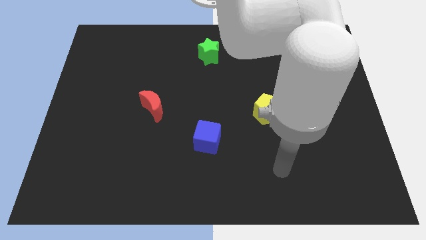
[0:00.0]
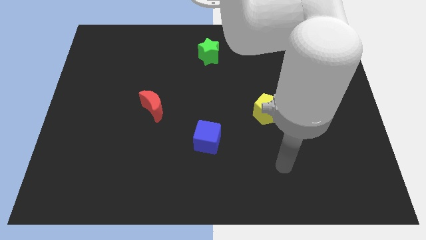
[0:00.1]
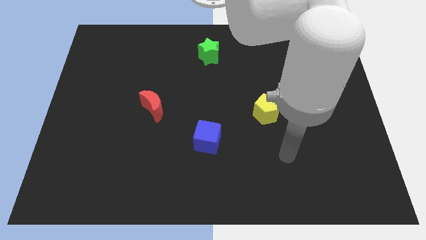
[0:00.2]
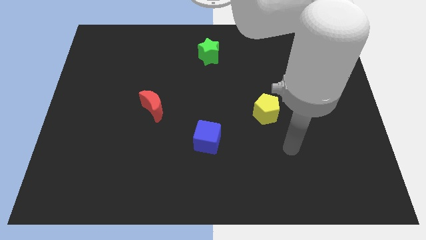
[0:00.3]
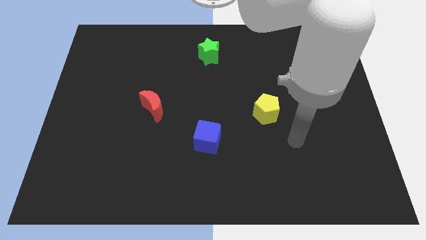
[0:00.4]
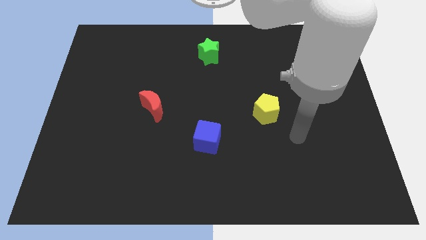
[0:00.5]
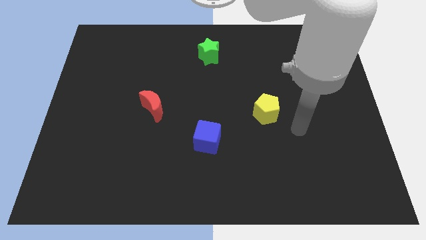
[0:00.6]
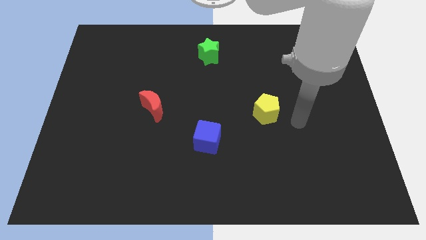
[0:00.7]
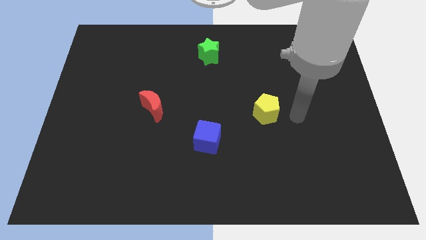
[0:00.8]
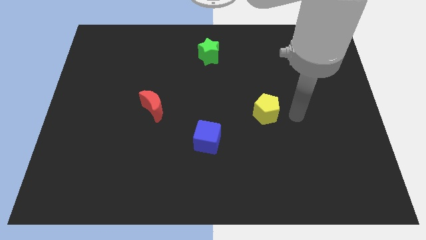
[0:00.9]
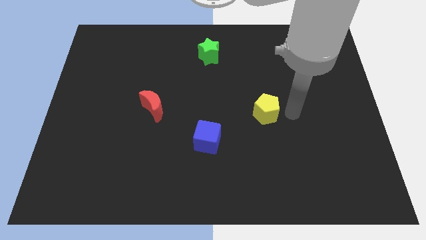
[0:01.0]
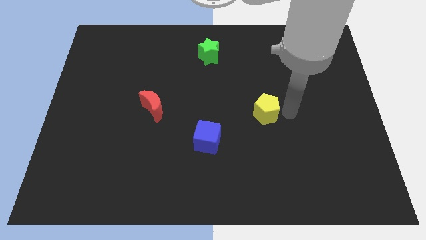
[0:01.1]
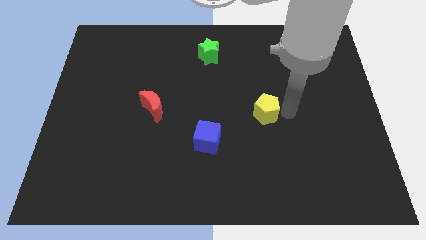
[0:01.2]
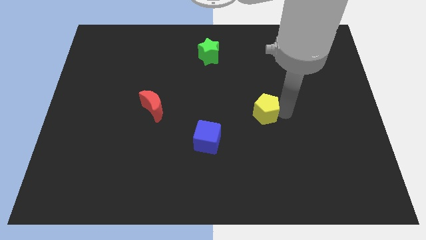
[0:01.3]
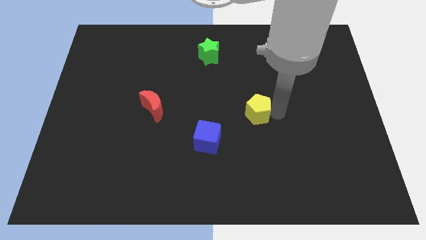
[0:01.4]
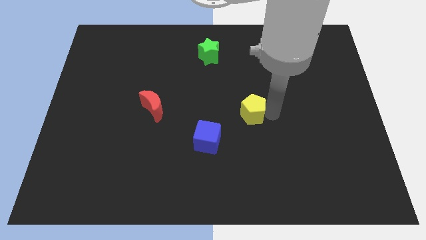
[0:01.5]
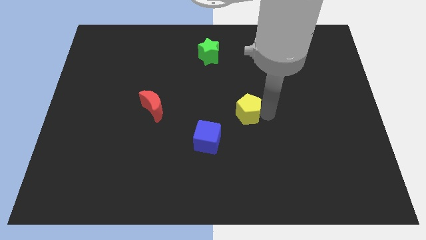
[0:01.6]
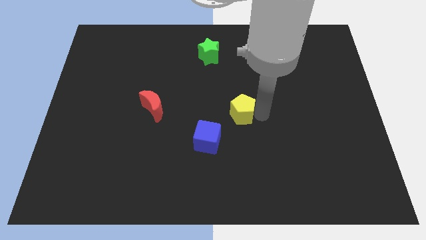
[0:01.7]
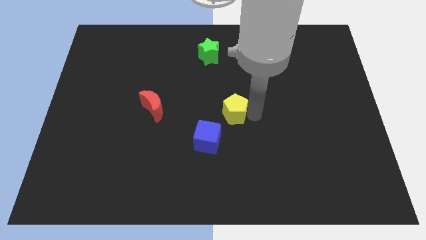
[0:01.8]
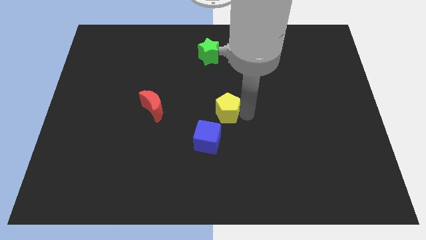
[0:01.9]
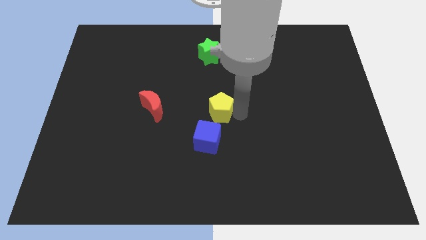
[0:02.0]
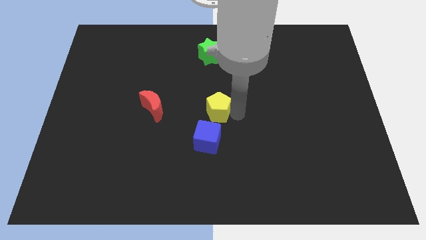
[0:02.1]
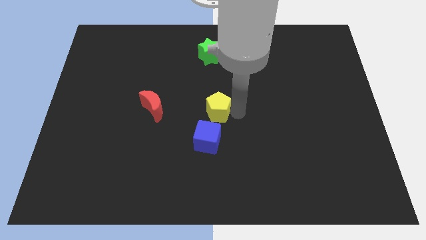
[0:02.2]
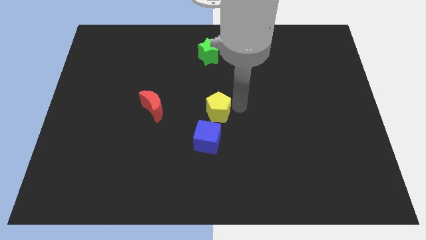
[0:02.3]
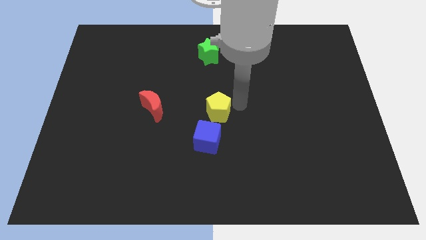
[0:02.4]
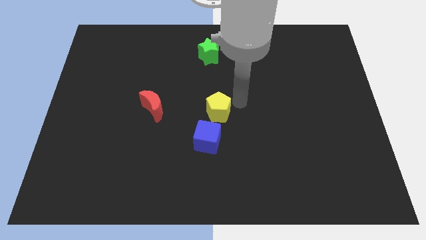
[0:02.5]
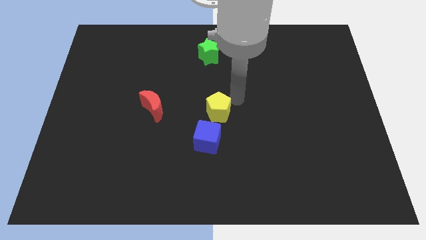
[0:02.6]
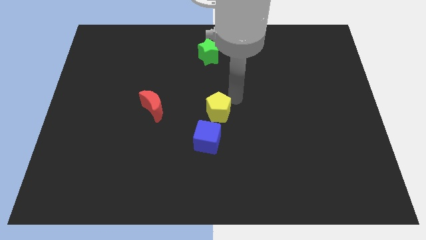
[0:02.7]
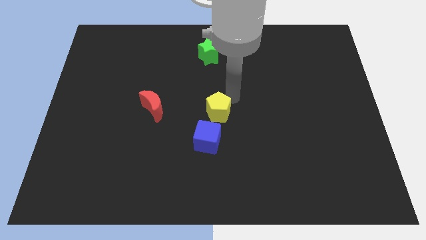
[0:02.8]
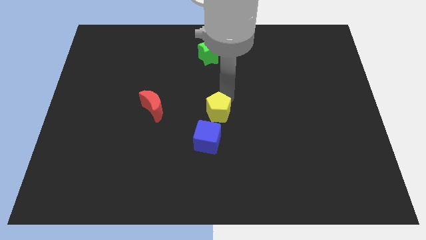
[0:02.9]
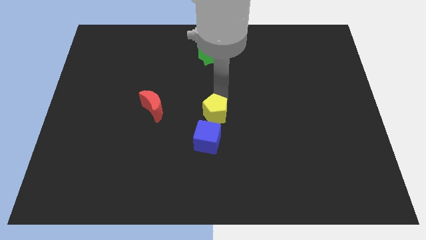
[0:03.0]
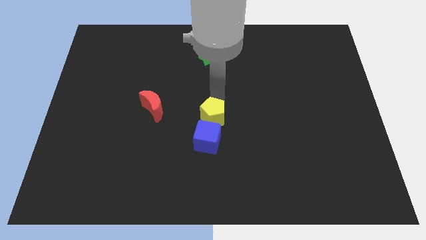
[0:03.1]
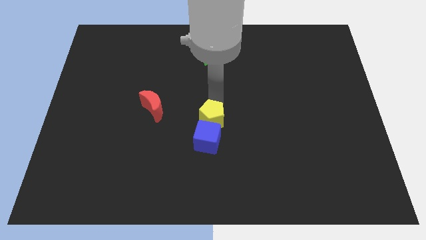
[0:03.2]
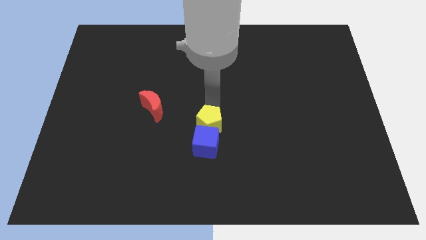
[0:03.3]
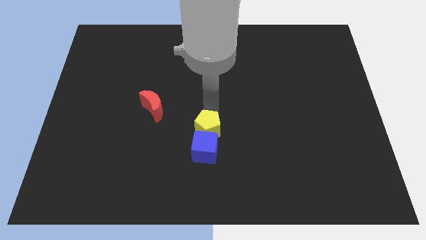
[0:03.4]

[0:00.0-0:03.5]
move the pentagon towards the cube

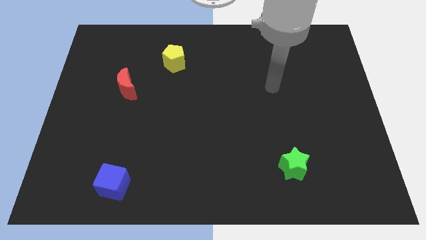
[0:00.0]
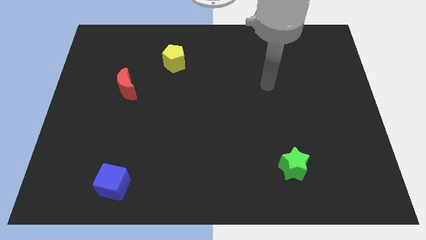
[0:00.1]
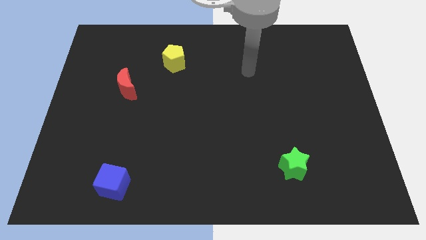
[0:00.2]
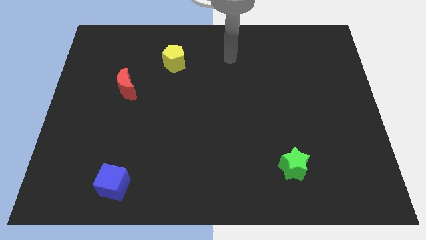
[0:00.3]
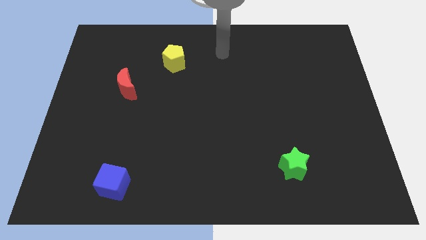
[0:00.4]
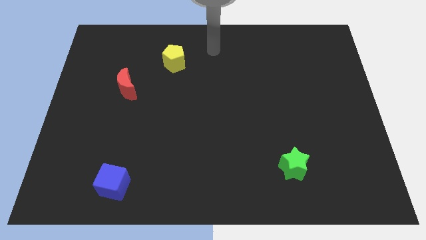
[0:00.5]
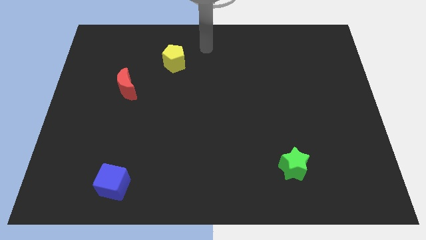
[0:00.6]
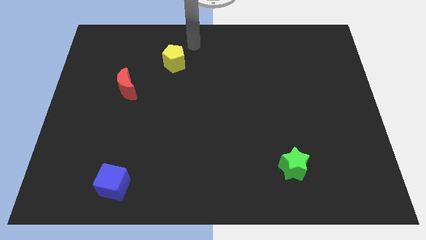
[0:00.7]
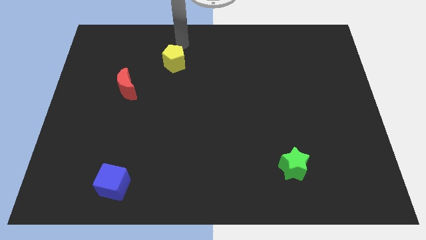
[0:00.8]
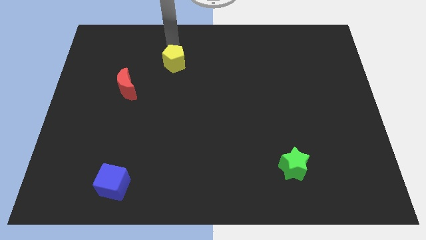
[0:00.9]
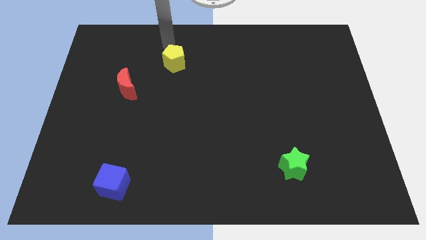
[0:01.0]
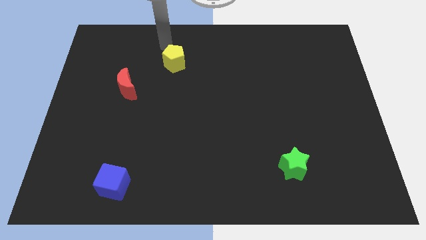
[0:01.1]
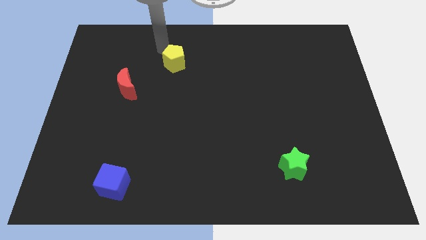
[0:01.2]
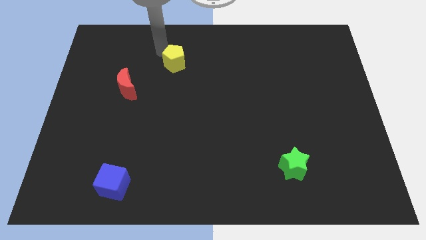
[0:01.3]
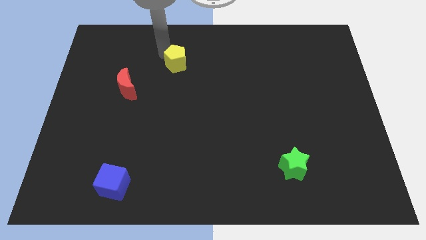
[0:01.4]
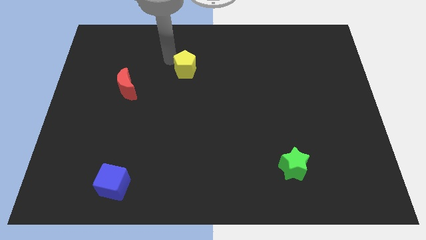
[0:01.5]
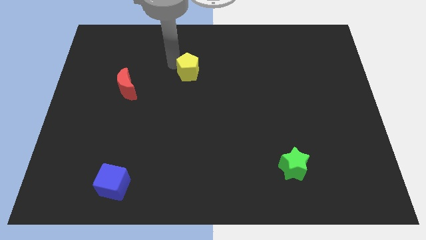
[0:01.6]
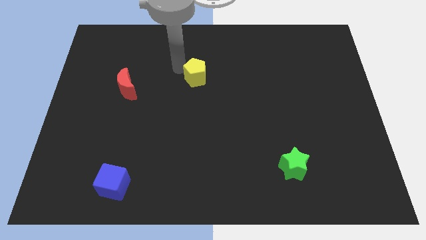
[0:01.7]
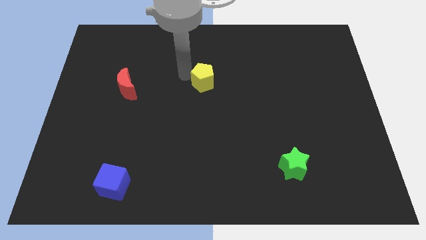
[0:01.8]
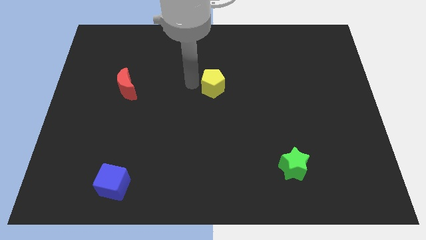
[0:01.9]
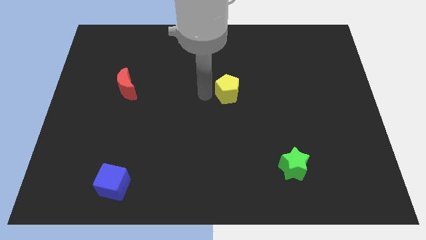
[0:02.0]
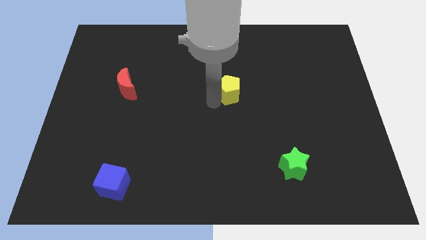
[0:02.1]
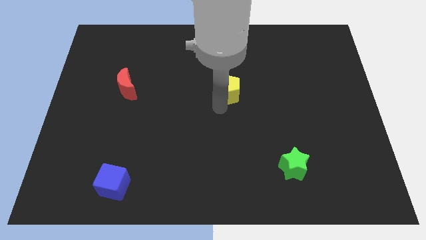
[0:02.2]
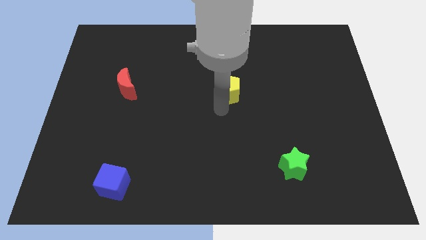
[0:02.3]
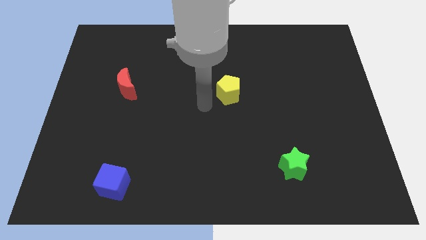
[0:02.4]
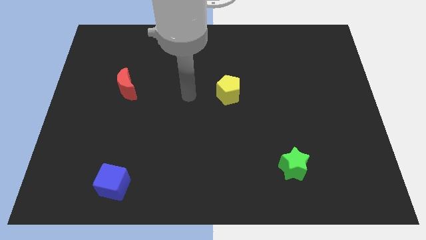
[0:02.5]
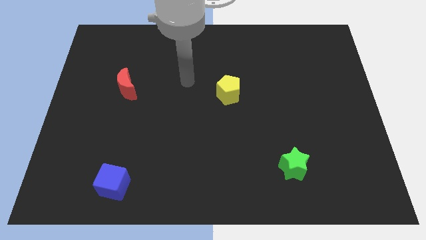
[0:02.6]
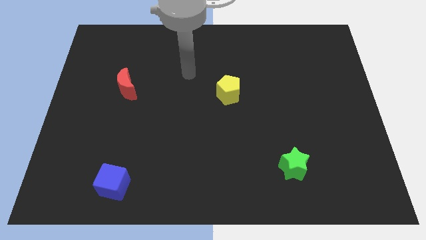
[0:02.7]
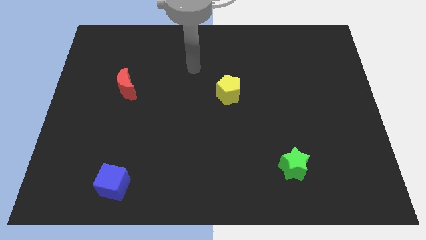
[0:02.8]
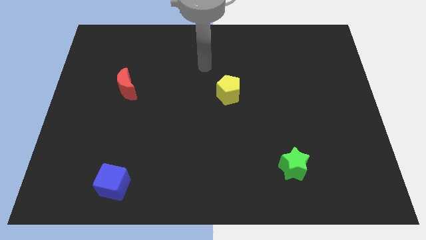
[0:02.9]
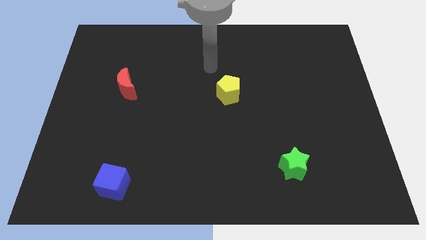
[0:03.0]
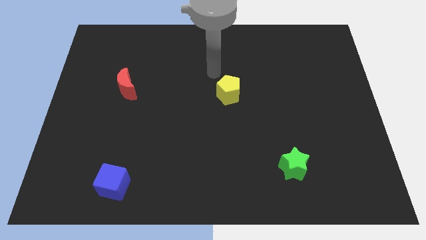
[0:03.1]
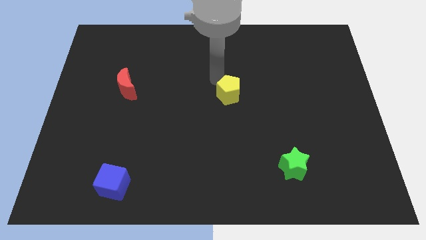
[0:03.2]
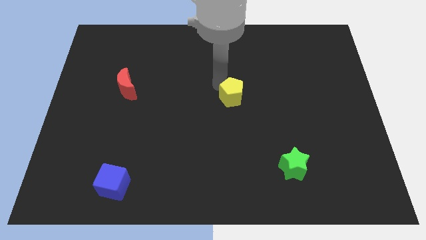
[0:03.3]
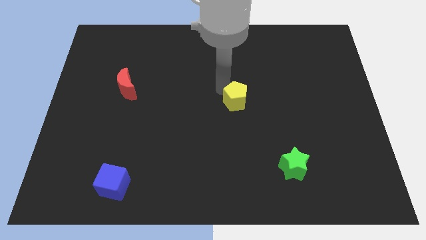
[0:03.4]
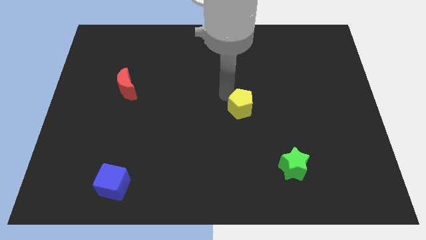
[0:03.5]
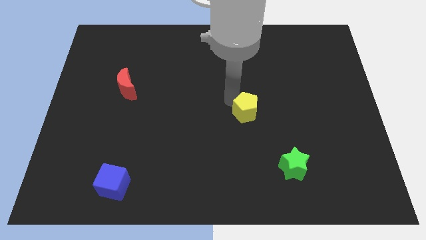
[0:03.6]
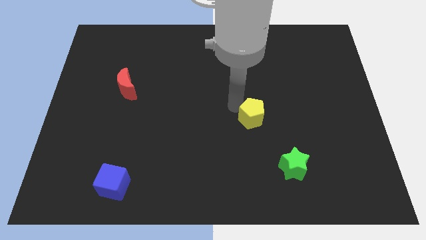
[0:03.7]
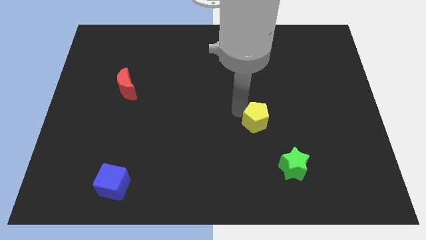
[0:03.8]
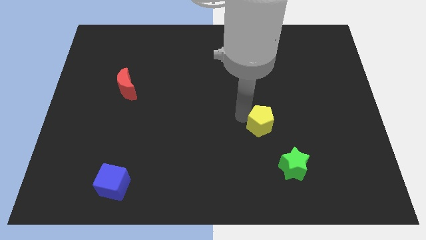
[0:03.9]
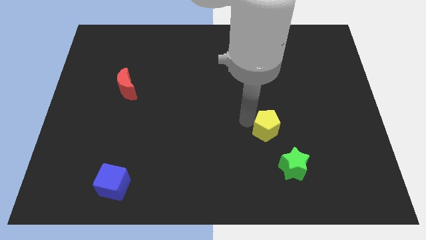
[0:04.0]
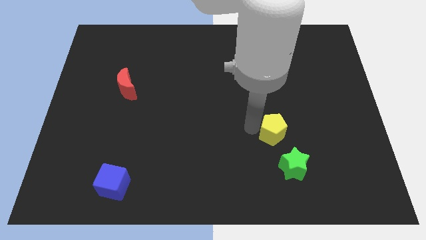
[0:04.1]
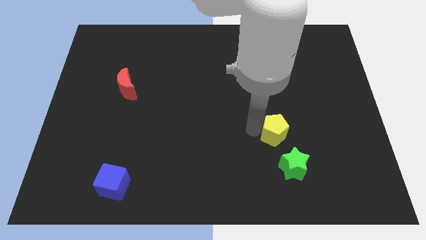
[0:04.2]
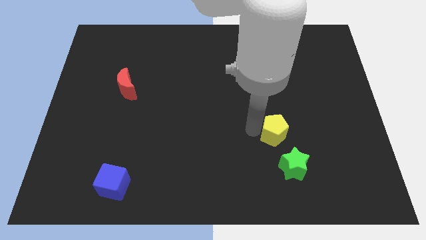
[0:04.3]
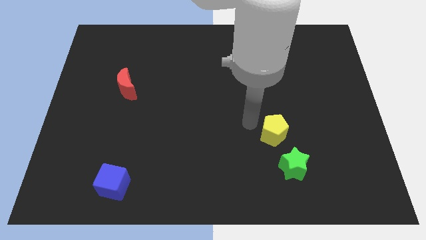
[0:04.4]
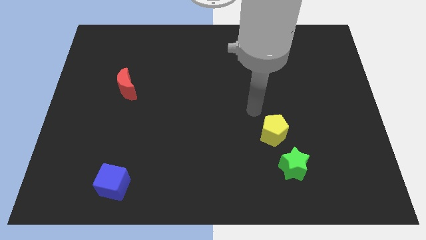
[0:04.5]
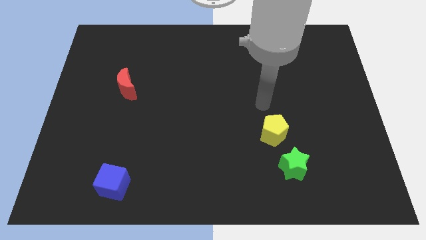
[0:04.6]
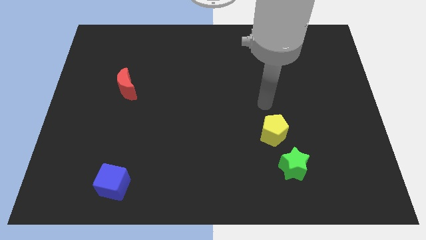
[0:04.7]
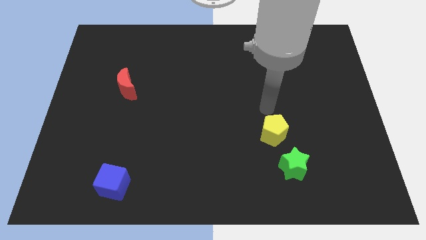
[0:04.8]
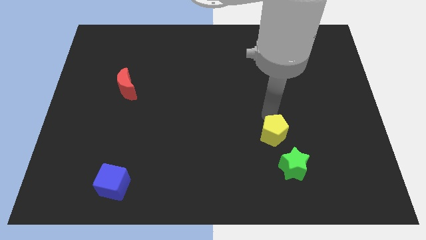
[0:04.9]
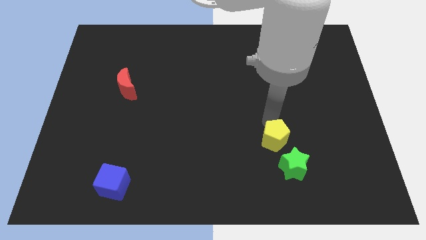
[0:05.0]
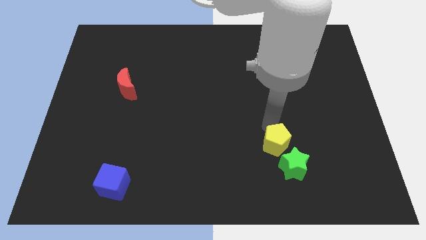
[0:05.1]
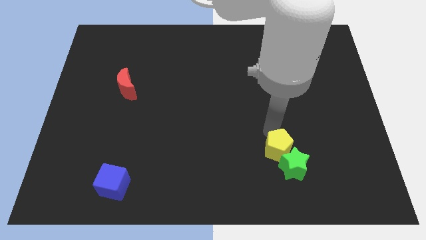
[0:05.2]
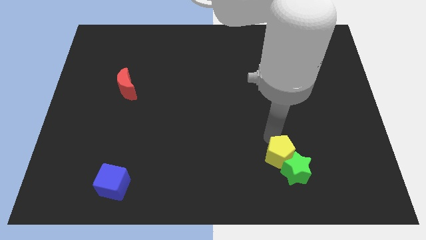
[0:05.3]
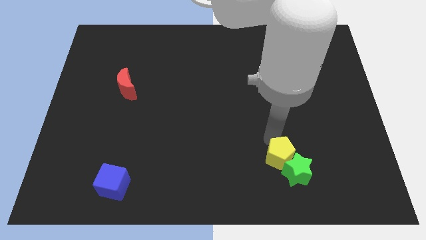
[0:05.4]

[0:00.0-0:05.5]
push the yellow pentagon next to the star
